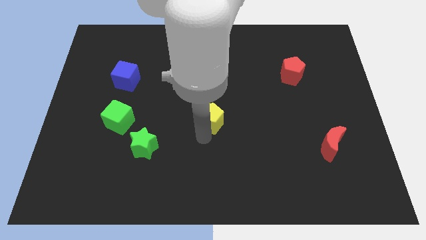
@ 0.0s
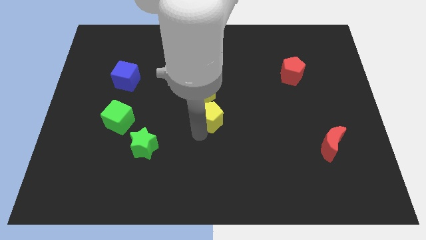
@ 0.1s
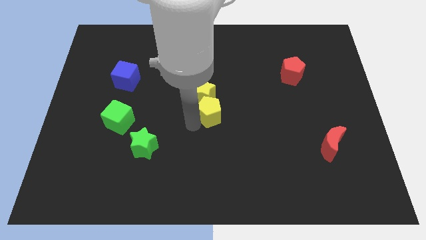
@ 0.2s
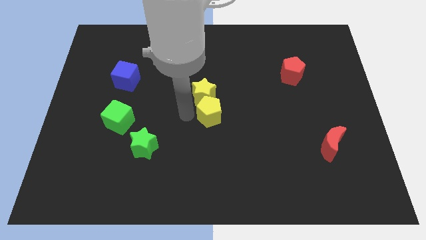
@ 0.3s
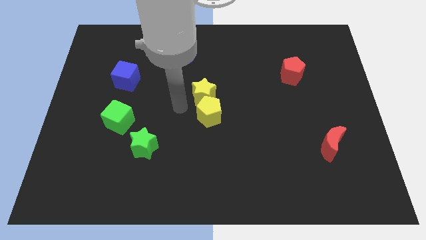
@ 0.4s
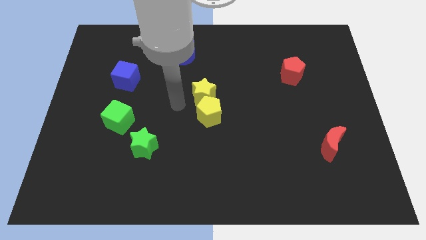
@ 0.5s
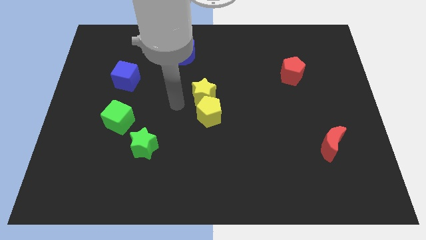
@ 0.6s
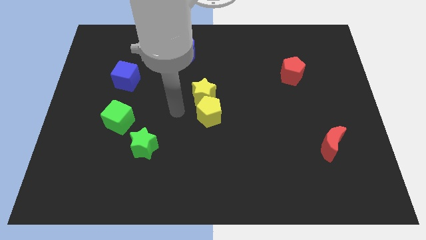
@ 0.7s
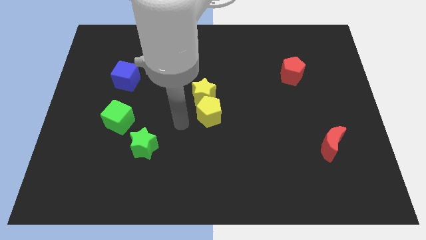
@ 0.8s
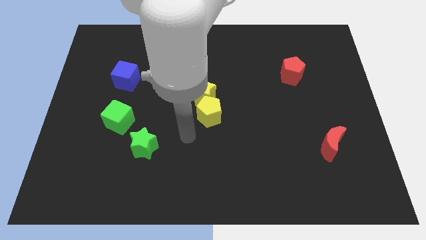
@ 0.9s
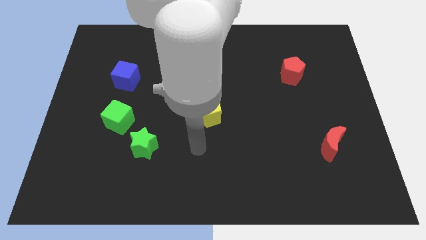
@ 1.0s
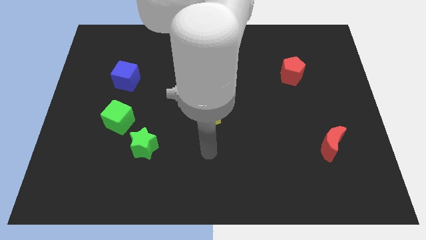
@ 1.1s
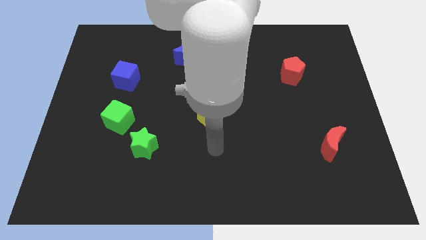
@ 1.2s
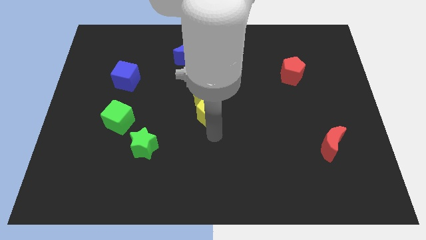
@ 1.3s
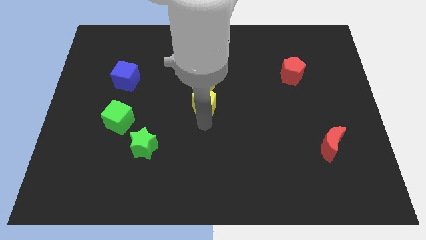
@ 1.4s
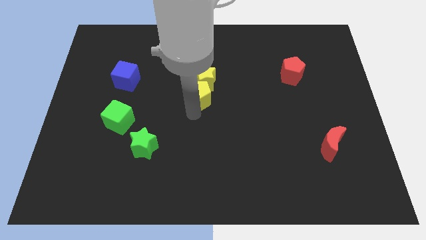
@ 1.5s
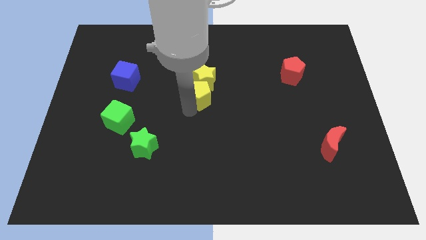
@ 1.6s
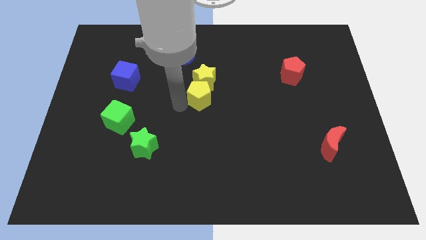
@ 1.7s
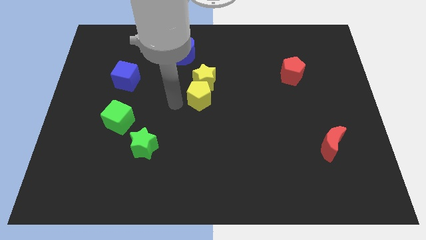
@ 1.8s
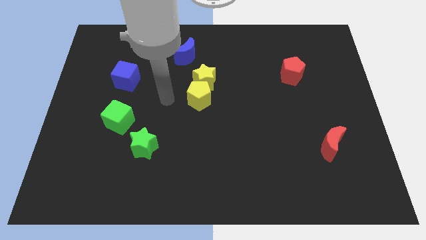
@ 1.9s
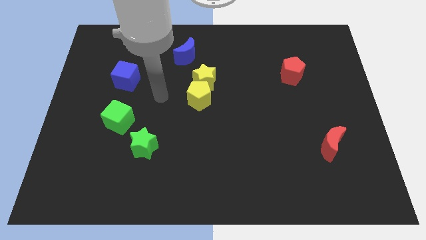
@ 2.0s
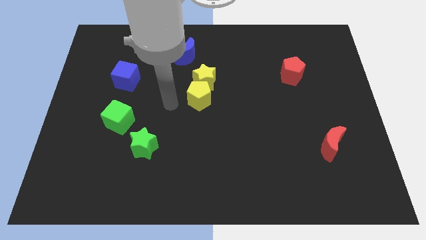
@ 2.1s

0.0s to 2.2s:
move yellow pentagon close to the yellow star

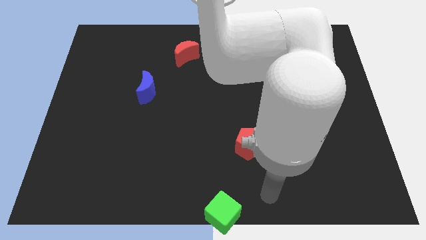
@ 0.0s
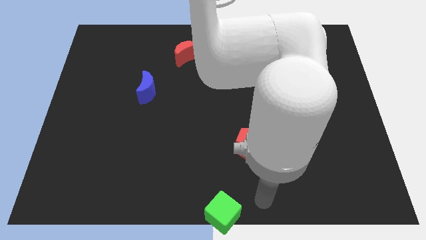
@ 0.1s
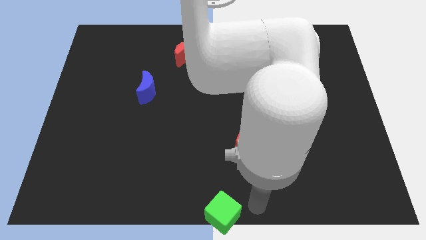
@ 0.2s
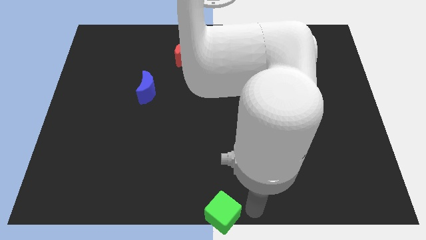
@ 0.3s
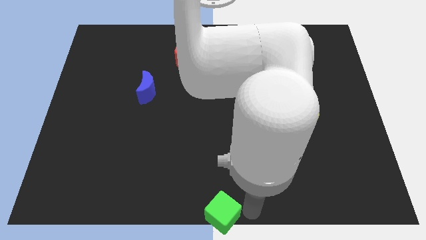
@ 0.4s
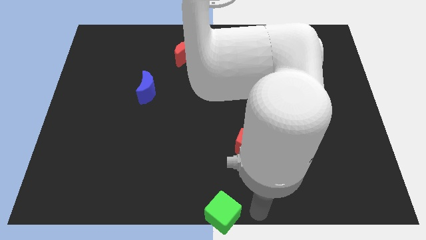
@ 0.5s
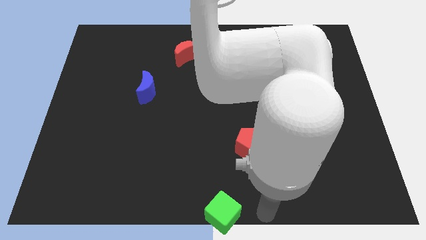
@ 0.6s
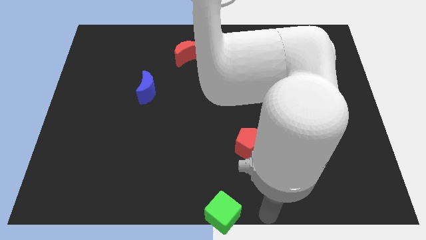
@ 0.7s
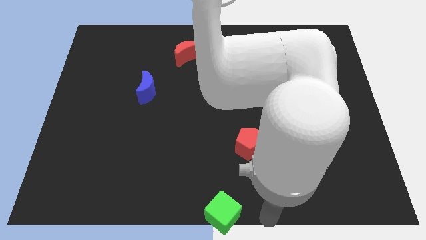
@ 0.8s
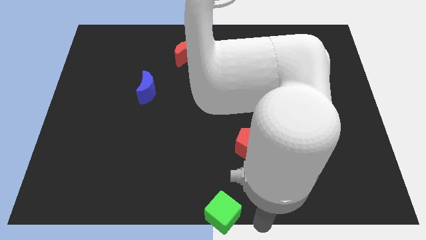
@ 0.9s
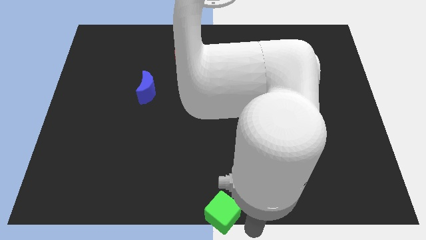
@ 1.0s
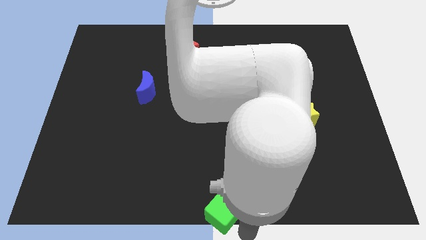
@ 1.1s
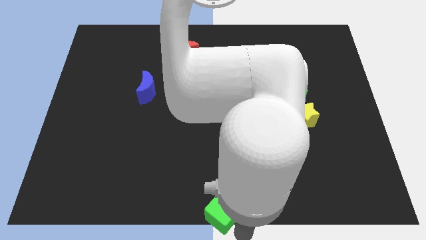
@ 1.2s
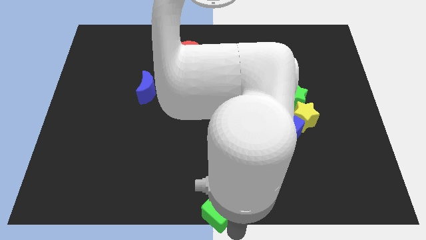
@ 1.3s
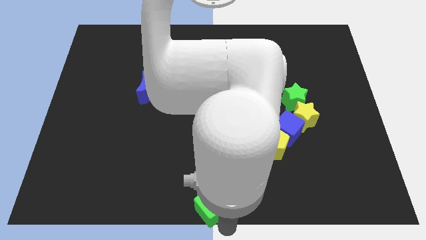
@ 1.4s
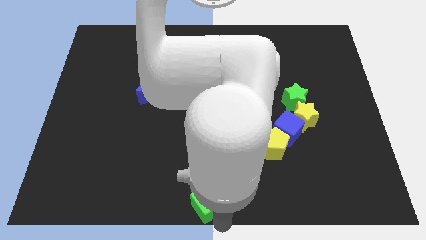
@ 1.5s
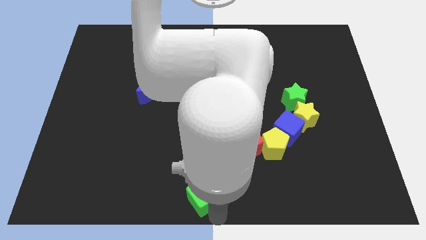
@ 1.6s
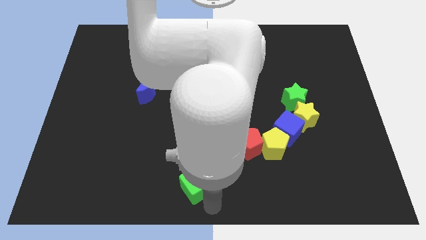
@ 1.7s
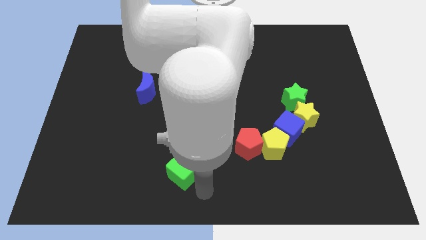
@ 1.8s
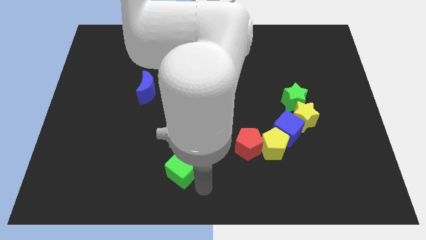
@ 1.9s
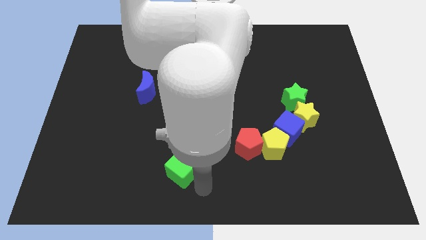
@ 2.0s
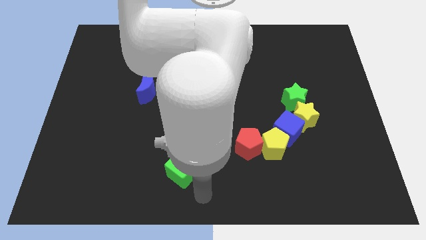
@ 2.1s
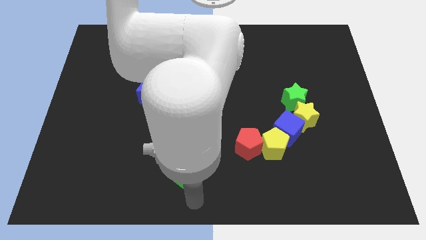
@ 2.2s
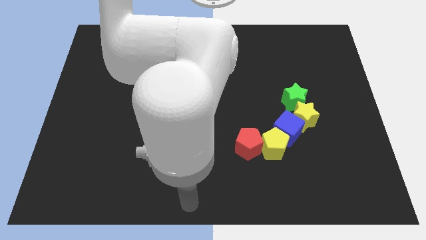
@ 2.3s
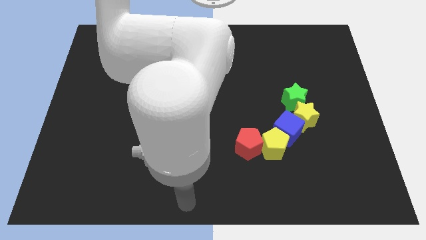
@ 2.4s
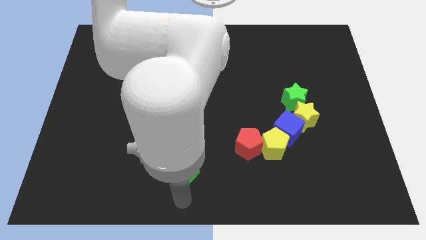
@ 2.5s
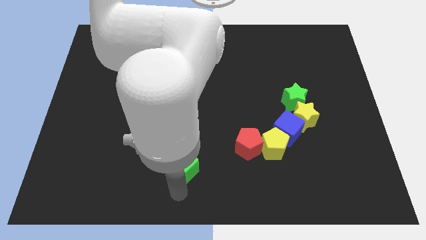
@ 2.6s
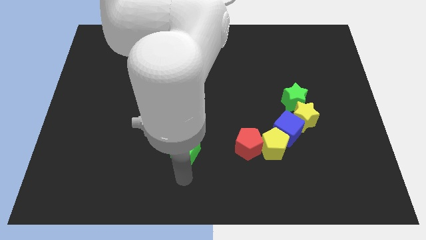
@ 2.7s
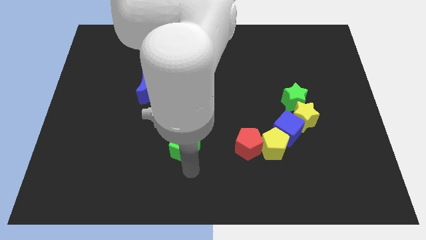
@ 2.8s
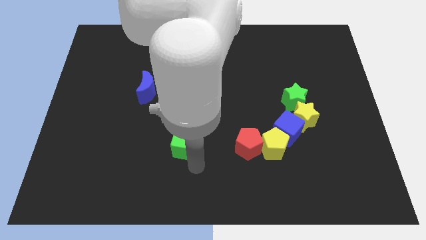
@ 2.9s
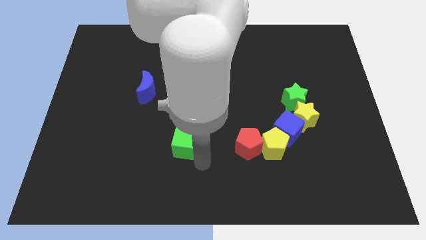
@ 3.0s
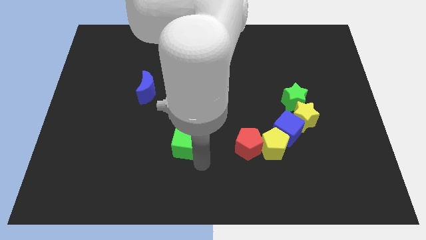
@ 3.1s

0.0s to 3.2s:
place the green cube left to the red pentagon

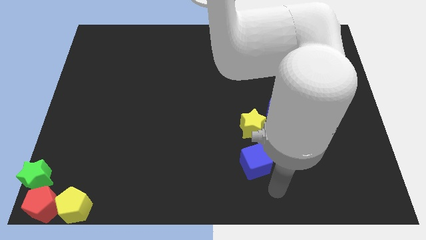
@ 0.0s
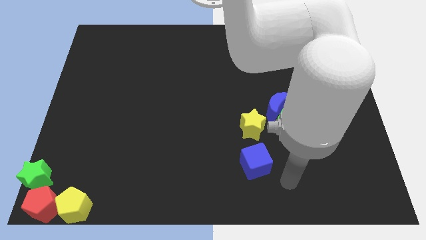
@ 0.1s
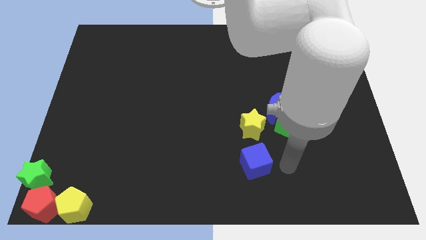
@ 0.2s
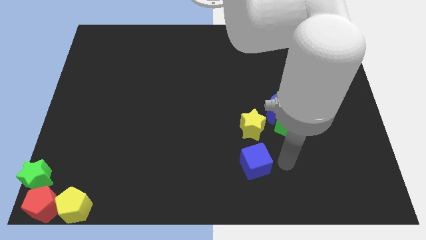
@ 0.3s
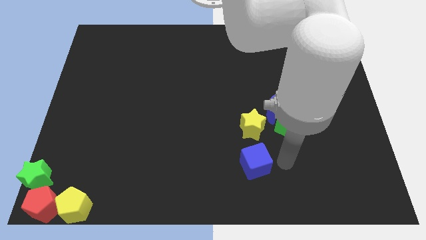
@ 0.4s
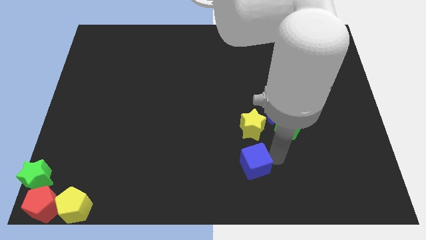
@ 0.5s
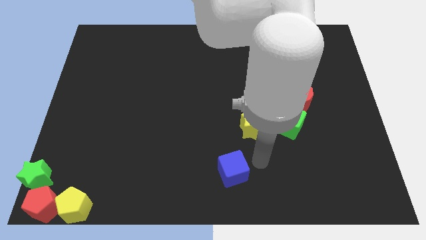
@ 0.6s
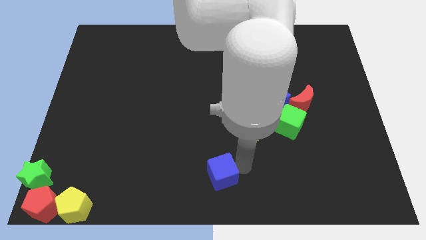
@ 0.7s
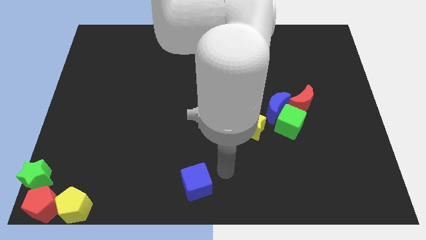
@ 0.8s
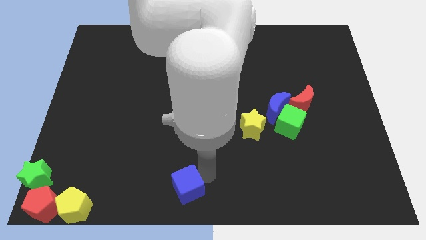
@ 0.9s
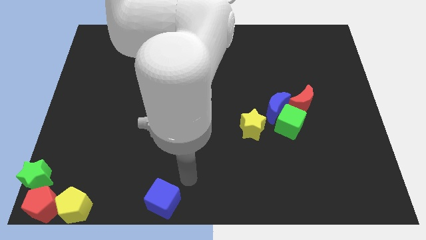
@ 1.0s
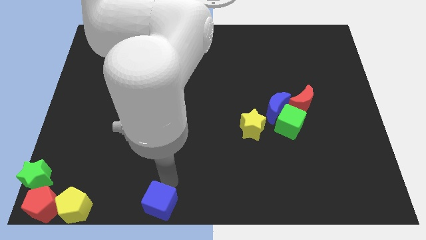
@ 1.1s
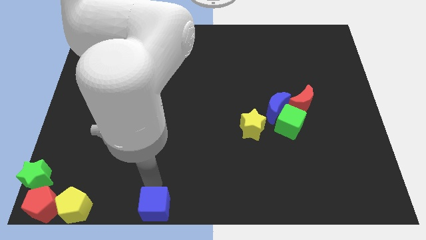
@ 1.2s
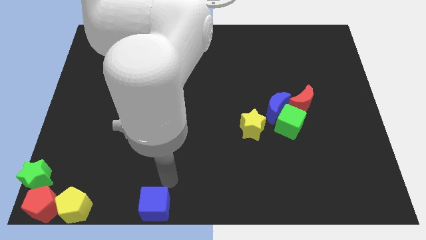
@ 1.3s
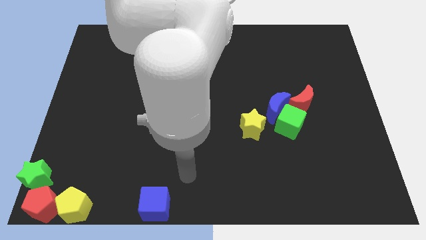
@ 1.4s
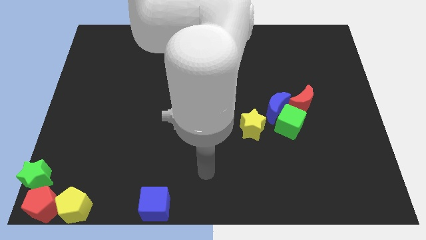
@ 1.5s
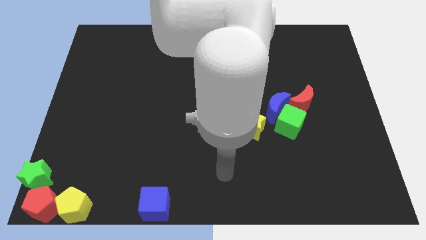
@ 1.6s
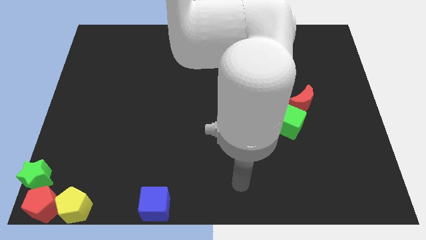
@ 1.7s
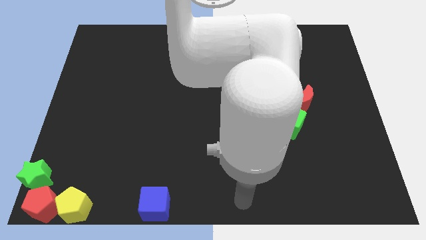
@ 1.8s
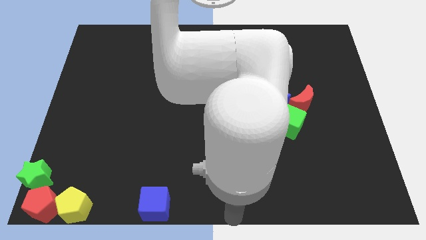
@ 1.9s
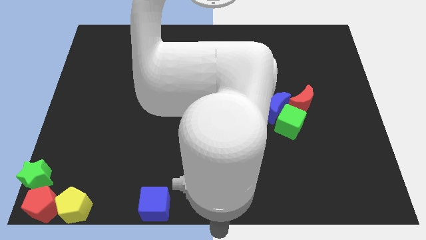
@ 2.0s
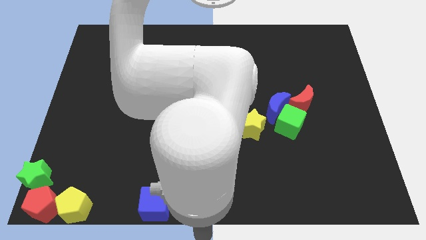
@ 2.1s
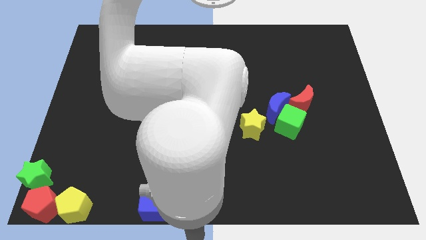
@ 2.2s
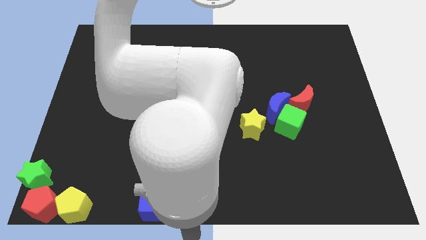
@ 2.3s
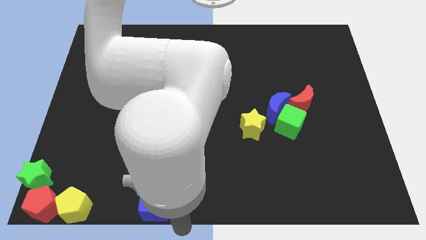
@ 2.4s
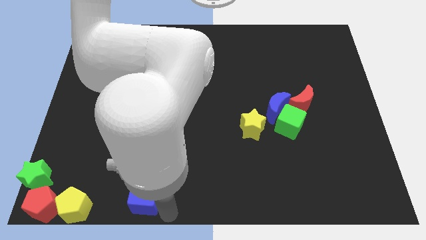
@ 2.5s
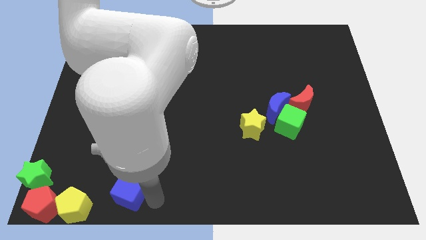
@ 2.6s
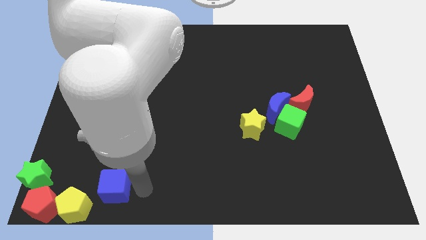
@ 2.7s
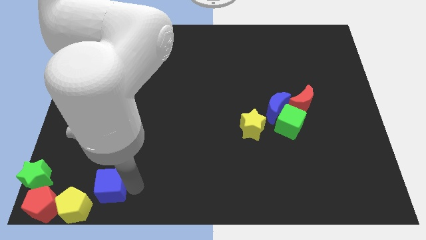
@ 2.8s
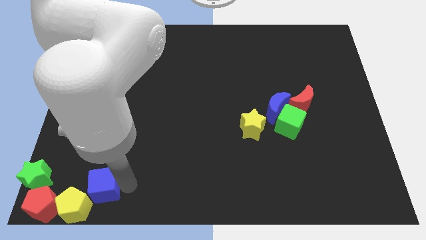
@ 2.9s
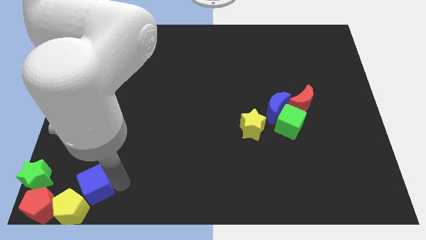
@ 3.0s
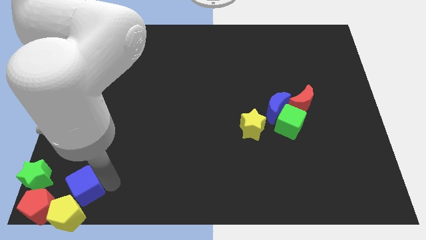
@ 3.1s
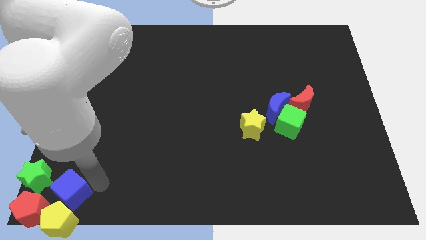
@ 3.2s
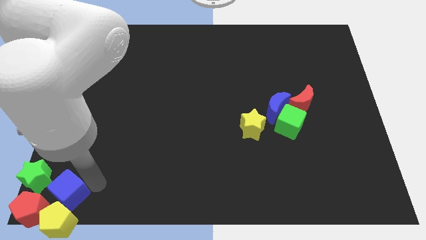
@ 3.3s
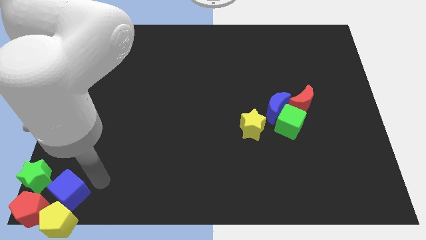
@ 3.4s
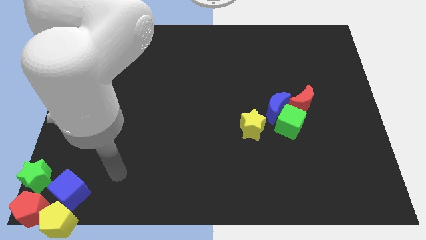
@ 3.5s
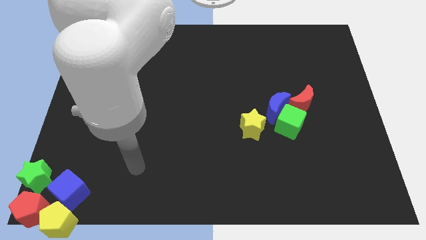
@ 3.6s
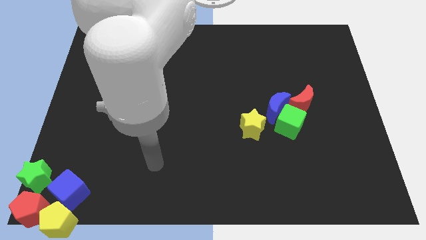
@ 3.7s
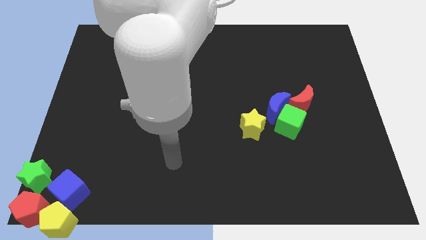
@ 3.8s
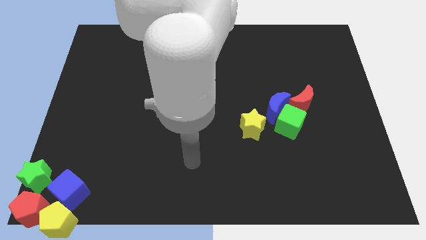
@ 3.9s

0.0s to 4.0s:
move the blue cube towards the top of the yellow pentagon
